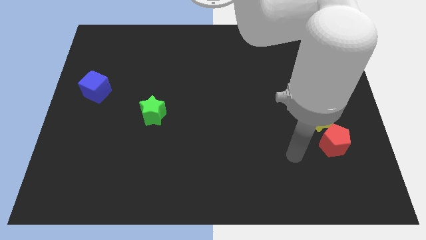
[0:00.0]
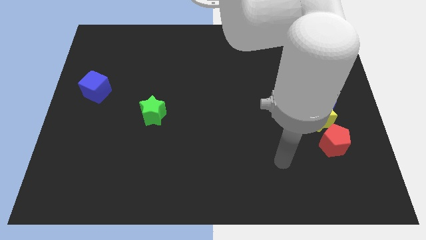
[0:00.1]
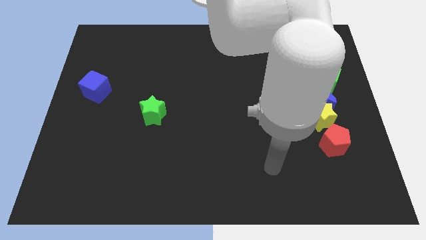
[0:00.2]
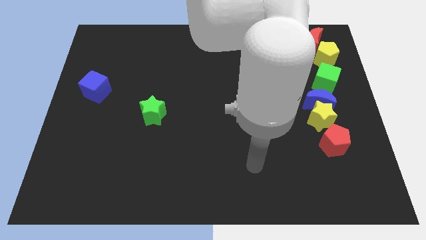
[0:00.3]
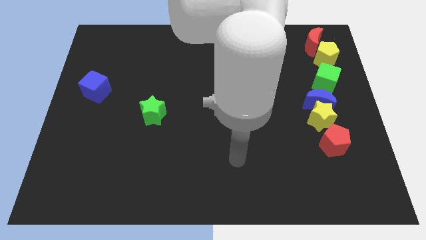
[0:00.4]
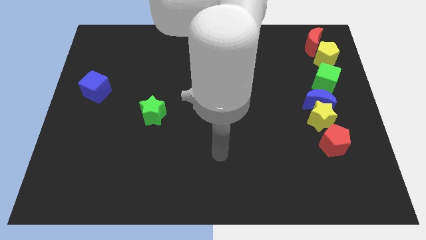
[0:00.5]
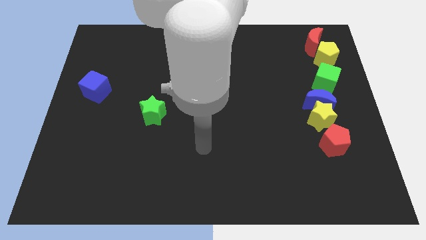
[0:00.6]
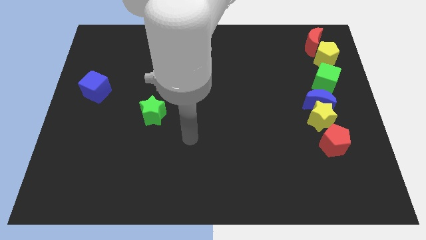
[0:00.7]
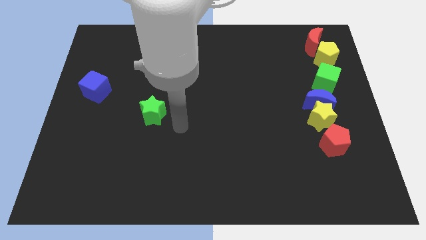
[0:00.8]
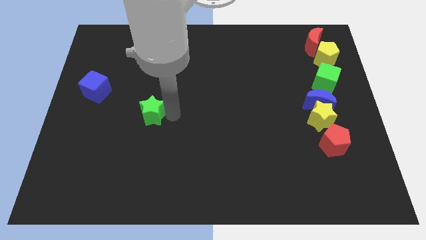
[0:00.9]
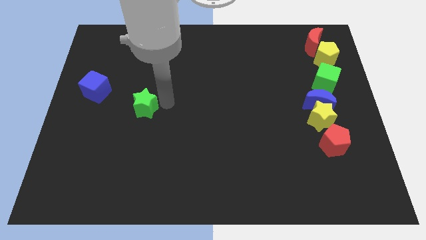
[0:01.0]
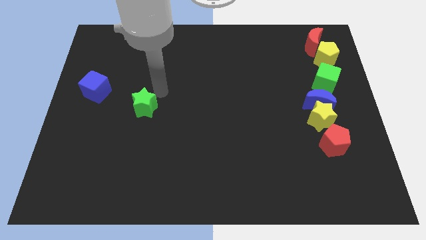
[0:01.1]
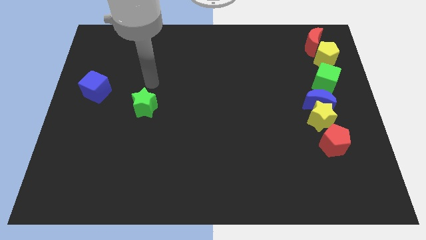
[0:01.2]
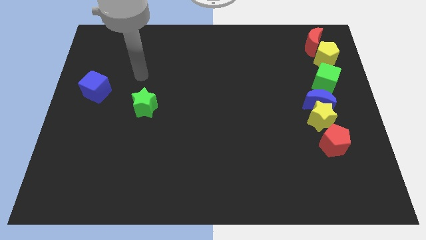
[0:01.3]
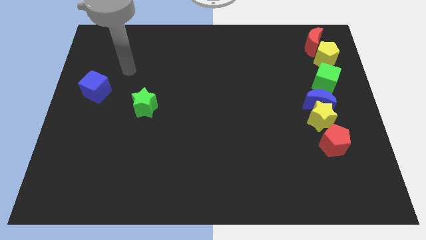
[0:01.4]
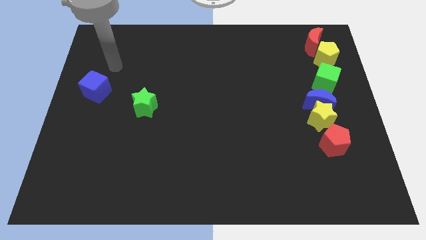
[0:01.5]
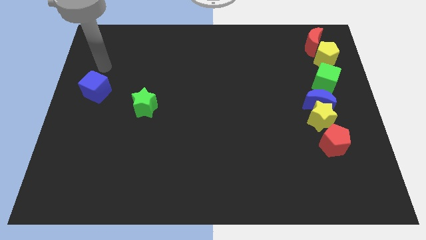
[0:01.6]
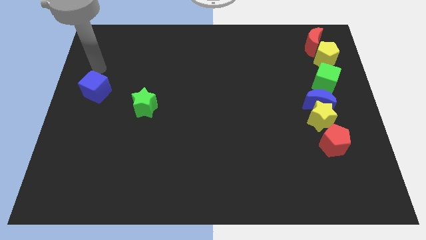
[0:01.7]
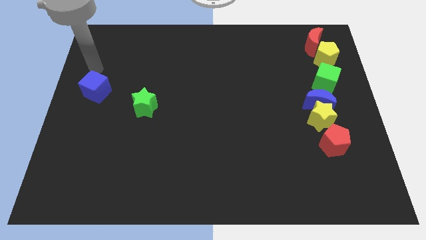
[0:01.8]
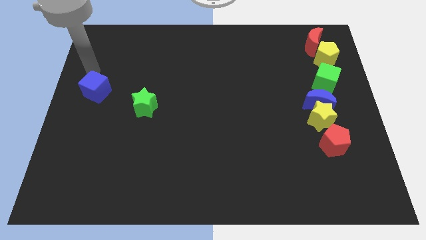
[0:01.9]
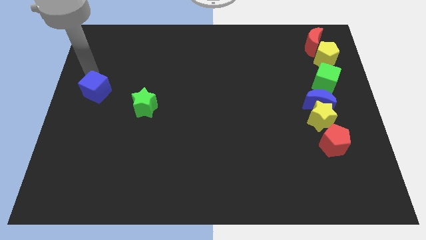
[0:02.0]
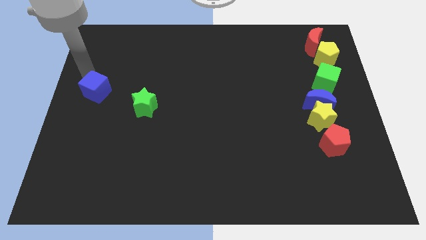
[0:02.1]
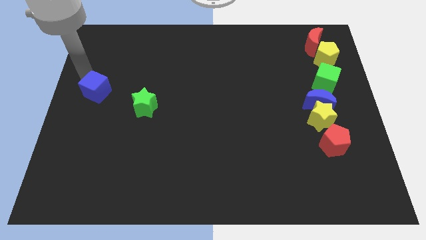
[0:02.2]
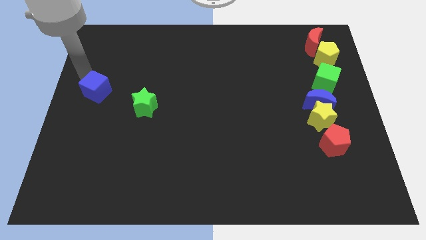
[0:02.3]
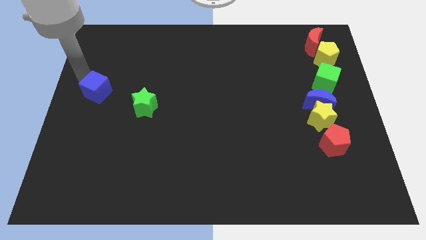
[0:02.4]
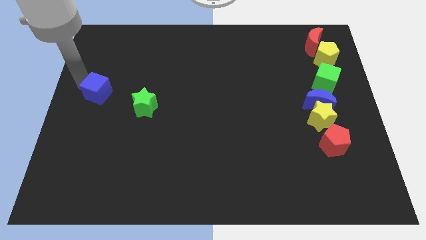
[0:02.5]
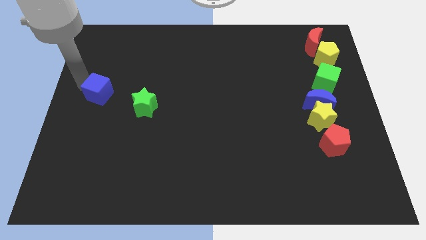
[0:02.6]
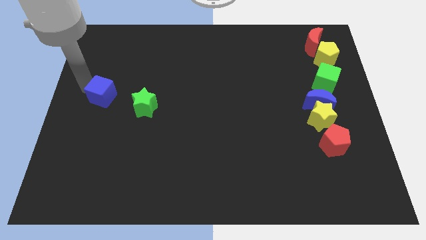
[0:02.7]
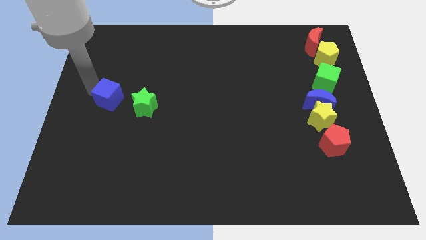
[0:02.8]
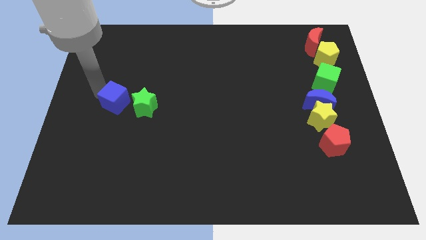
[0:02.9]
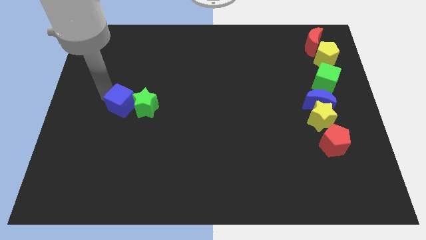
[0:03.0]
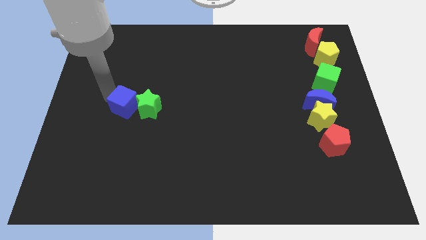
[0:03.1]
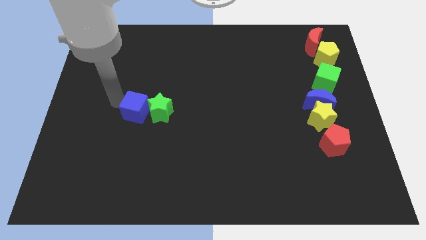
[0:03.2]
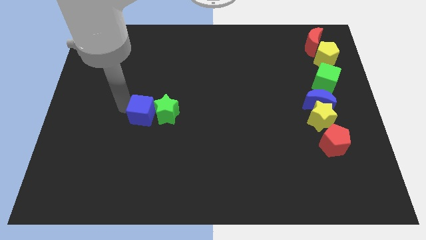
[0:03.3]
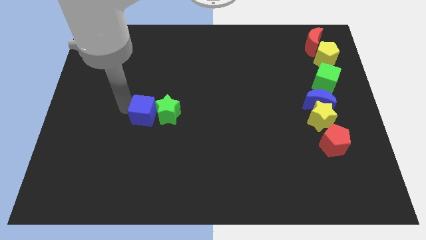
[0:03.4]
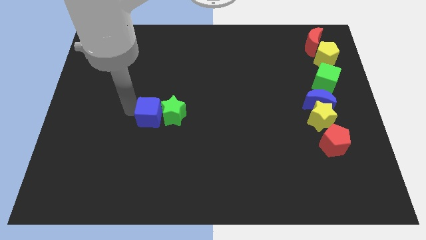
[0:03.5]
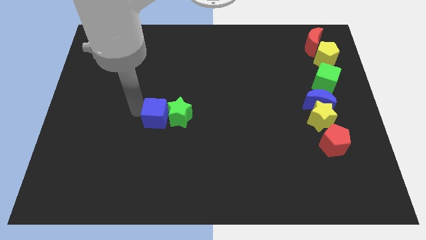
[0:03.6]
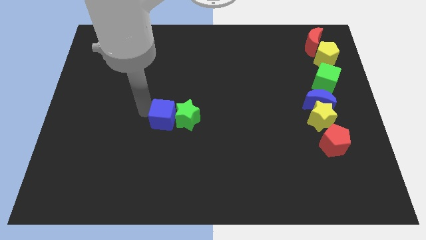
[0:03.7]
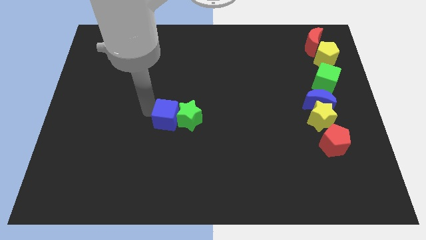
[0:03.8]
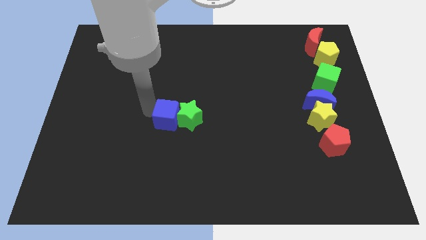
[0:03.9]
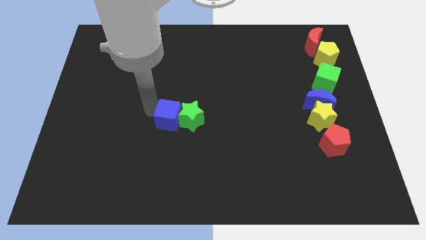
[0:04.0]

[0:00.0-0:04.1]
push the blue cube and green star at the center of the board

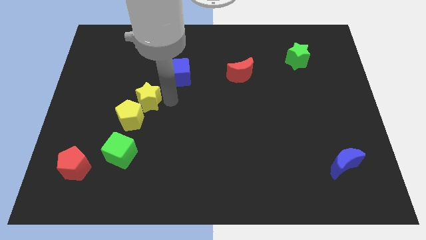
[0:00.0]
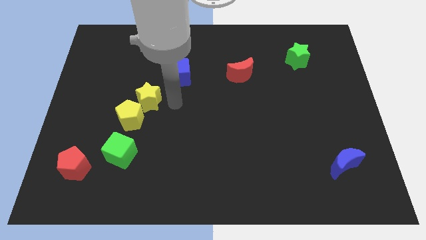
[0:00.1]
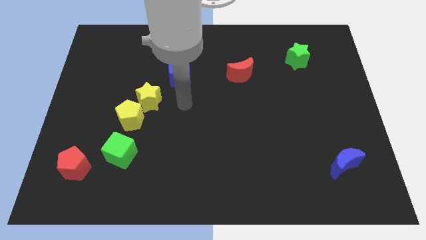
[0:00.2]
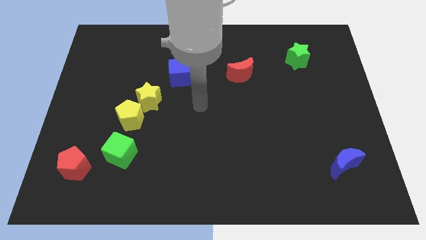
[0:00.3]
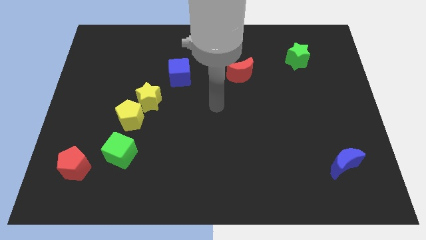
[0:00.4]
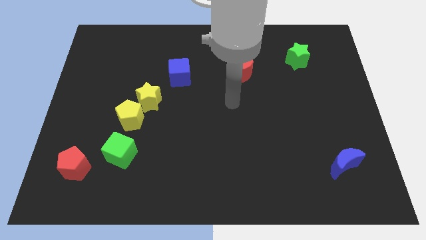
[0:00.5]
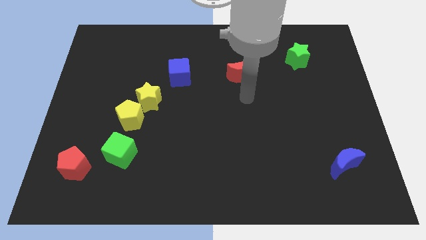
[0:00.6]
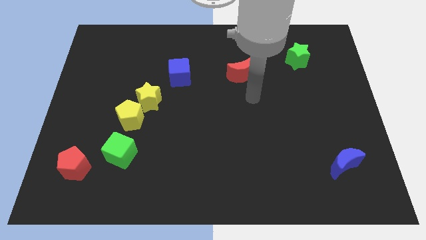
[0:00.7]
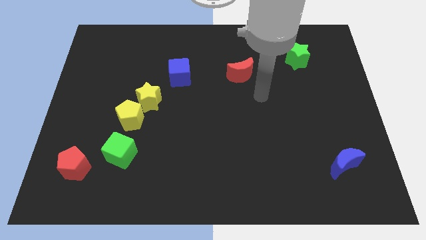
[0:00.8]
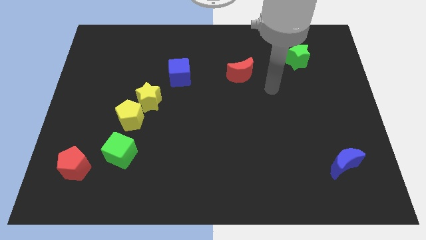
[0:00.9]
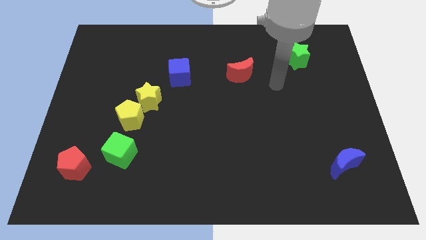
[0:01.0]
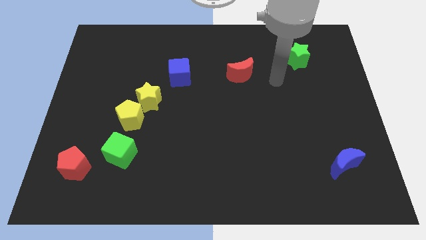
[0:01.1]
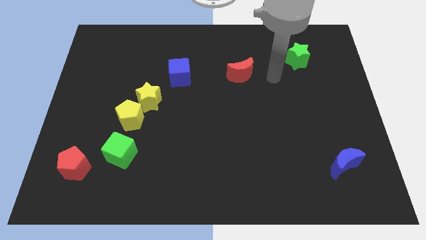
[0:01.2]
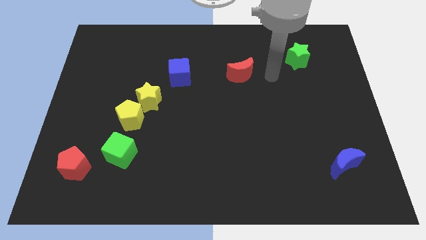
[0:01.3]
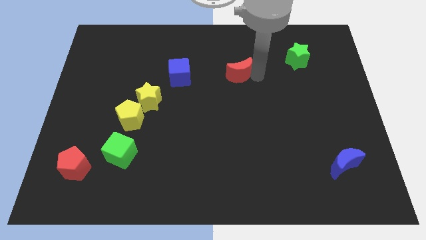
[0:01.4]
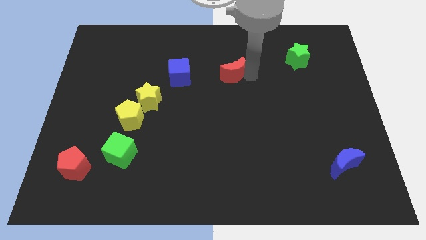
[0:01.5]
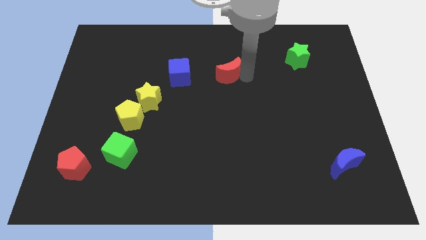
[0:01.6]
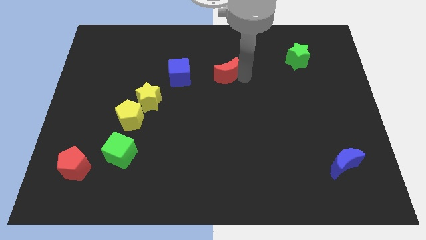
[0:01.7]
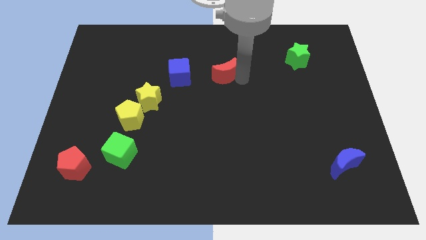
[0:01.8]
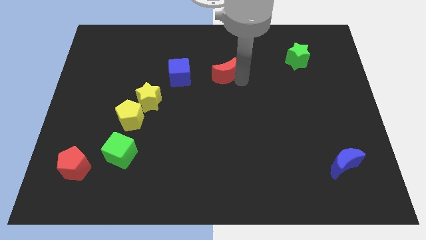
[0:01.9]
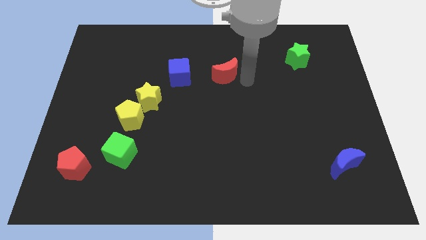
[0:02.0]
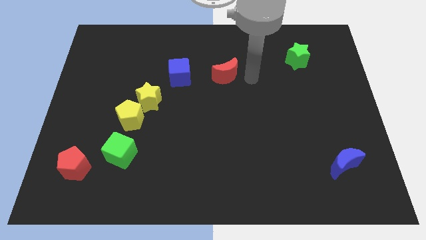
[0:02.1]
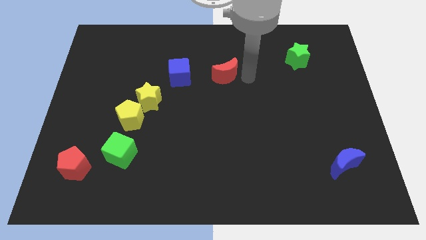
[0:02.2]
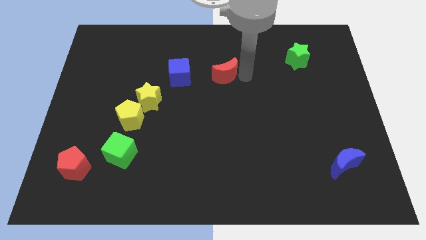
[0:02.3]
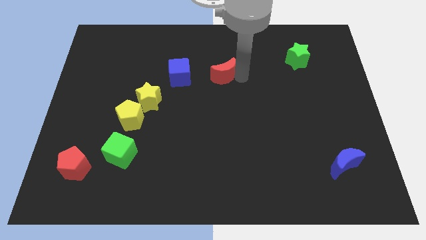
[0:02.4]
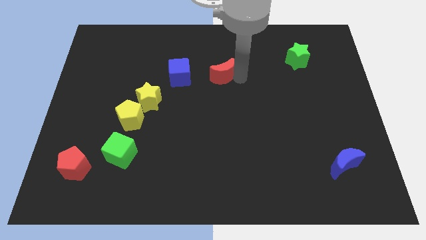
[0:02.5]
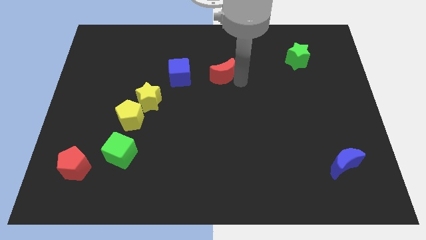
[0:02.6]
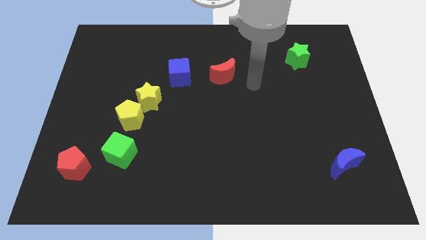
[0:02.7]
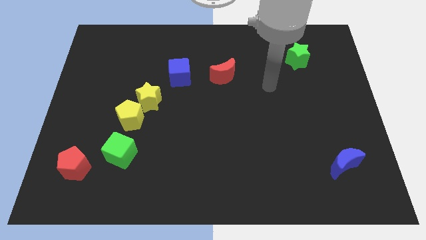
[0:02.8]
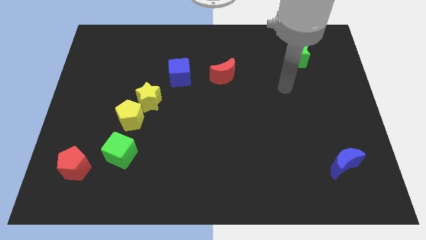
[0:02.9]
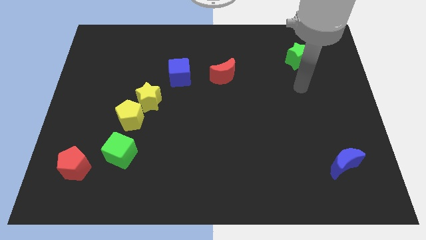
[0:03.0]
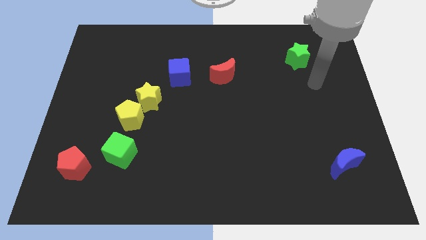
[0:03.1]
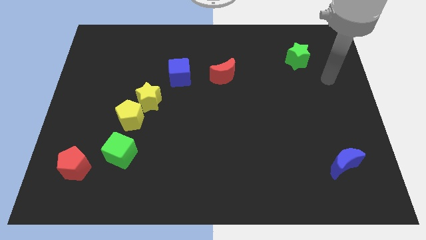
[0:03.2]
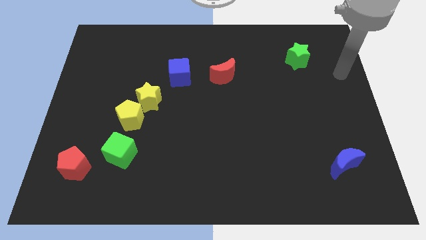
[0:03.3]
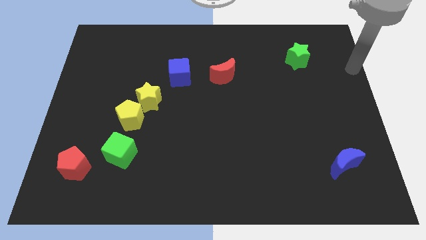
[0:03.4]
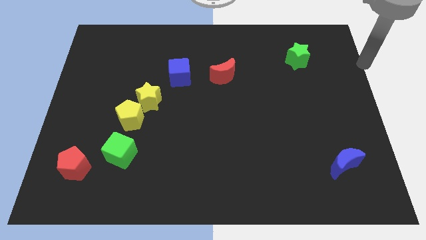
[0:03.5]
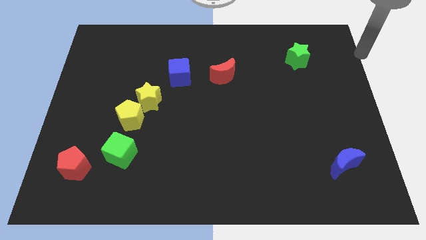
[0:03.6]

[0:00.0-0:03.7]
move the red moon close to the blue cube

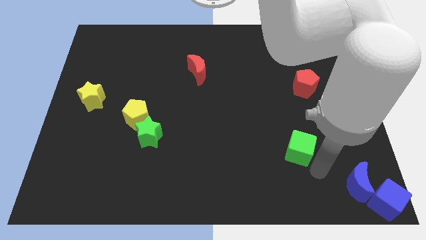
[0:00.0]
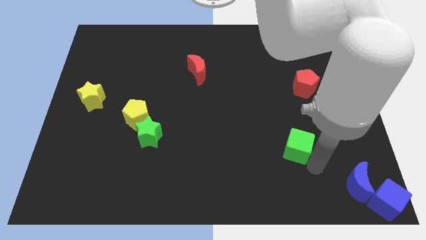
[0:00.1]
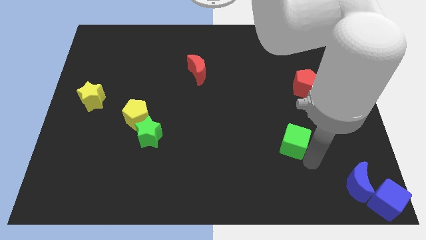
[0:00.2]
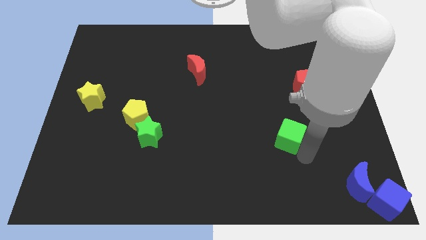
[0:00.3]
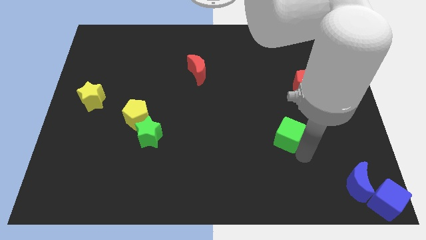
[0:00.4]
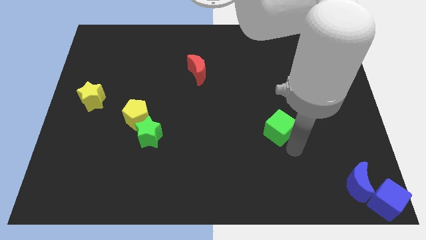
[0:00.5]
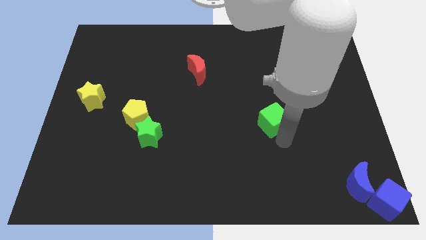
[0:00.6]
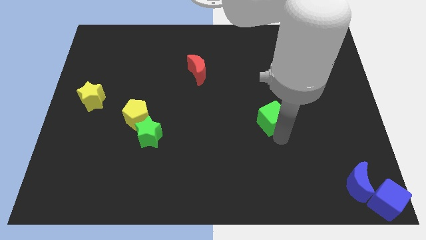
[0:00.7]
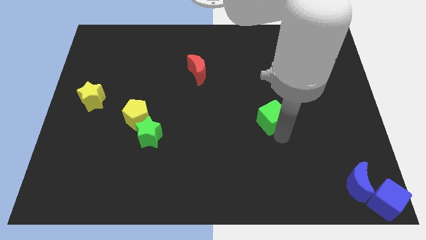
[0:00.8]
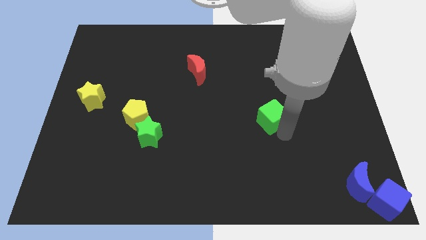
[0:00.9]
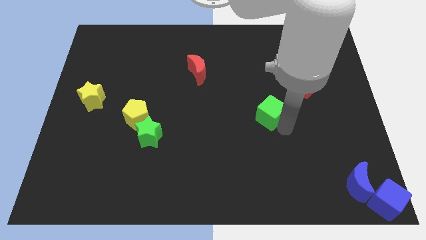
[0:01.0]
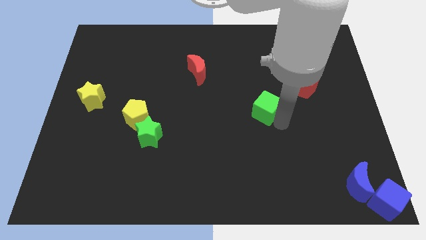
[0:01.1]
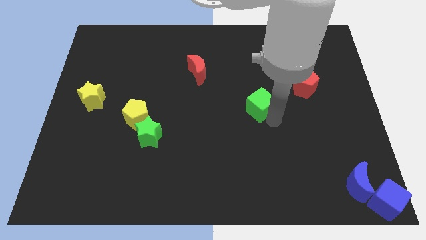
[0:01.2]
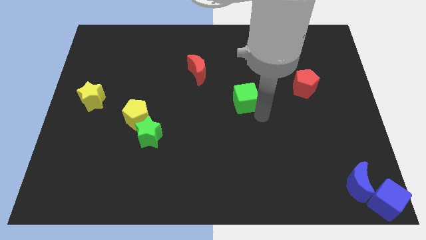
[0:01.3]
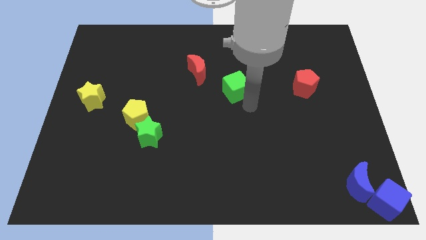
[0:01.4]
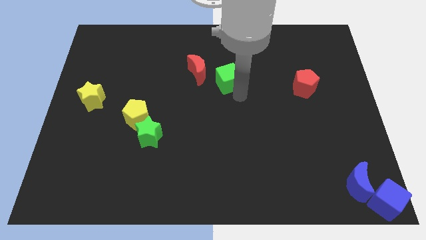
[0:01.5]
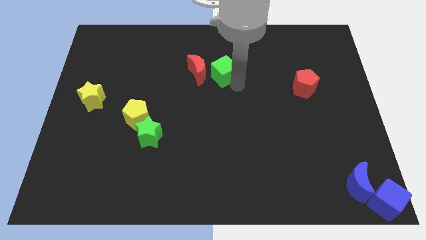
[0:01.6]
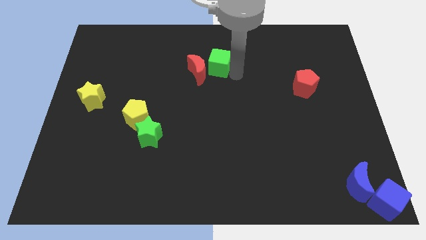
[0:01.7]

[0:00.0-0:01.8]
place the green cube to the right of the red moon
